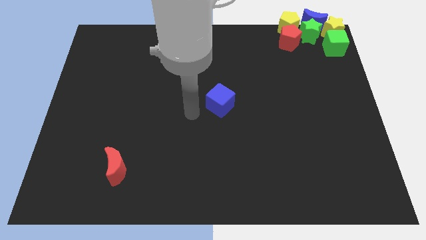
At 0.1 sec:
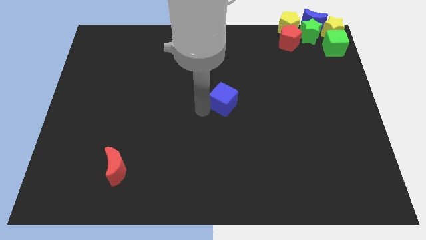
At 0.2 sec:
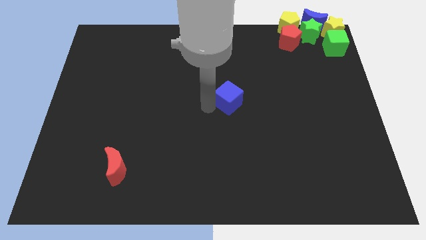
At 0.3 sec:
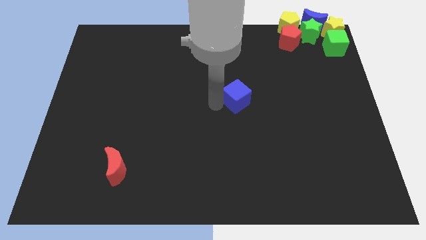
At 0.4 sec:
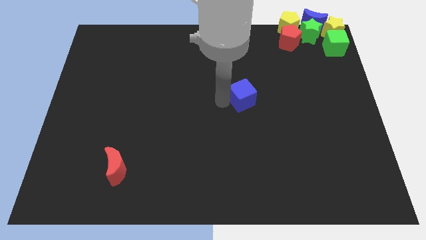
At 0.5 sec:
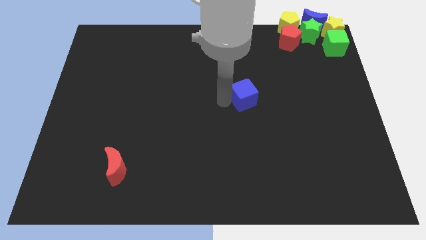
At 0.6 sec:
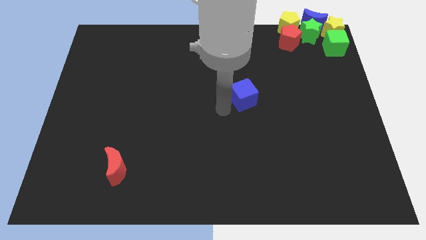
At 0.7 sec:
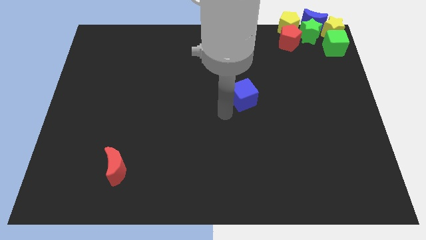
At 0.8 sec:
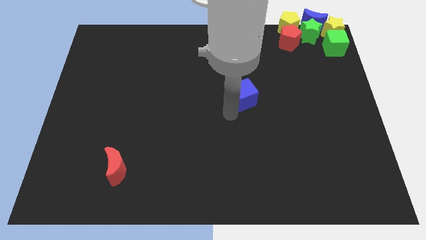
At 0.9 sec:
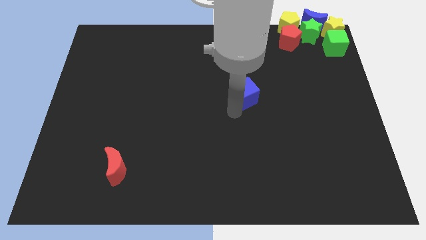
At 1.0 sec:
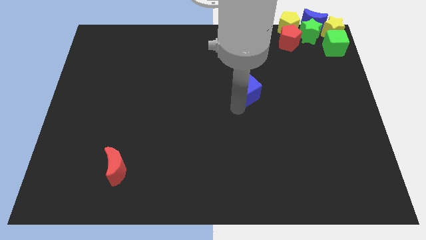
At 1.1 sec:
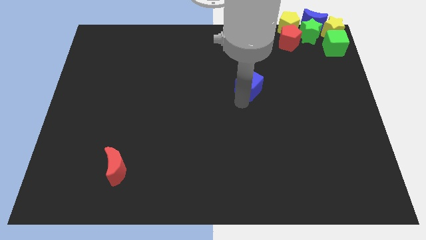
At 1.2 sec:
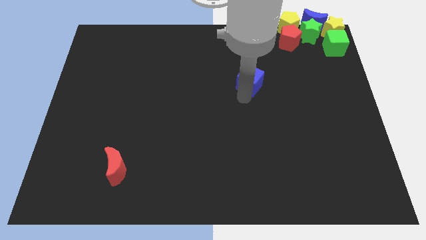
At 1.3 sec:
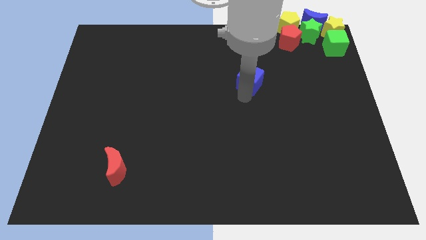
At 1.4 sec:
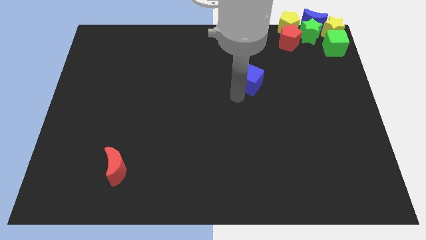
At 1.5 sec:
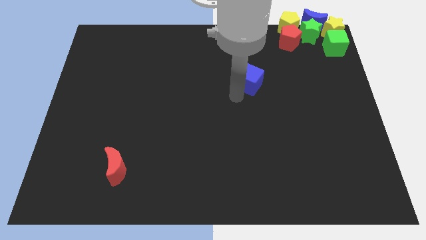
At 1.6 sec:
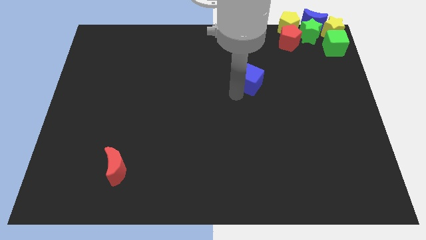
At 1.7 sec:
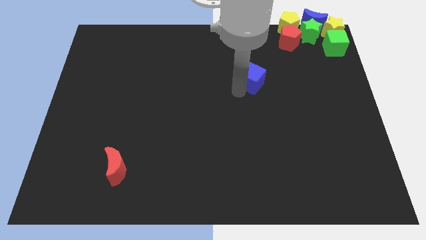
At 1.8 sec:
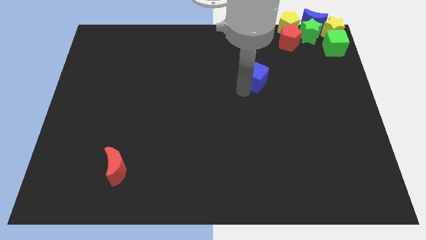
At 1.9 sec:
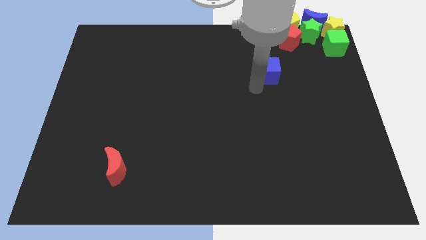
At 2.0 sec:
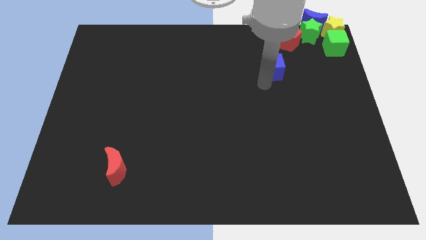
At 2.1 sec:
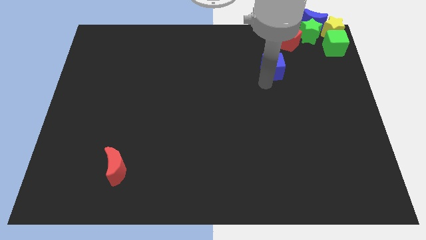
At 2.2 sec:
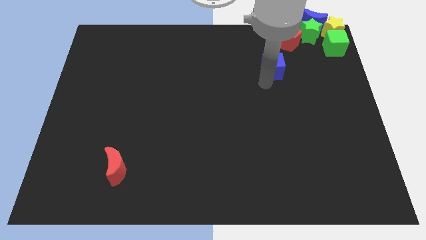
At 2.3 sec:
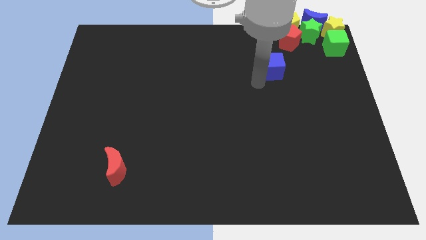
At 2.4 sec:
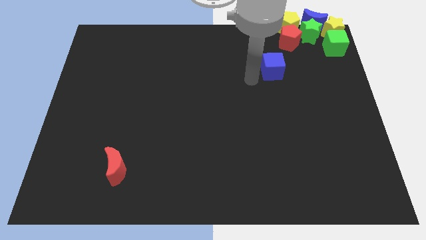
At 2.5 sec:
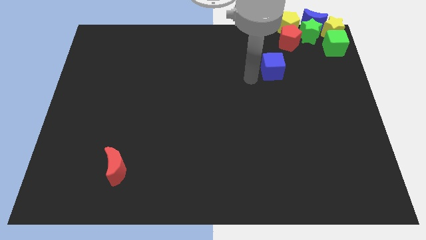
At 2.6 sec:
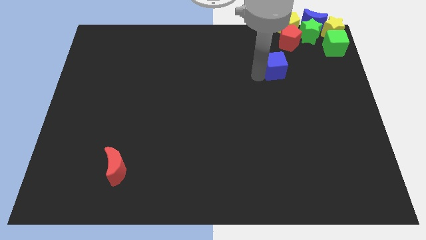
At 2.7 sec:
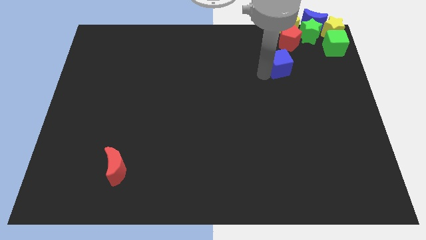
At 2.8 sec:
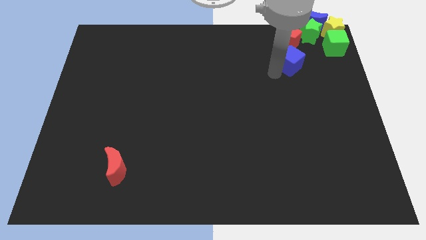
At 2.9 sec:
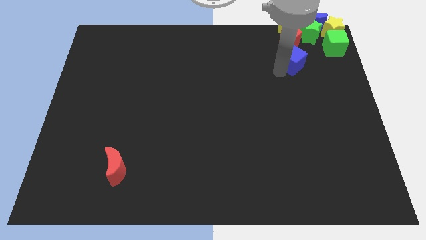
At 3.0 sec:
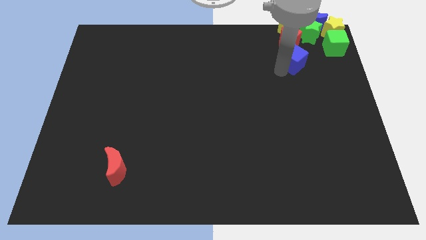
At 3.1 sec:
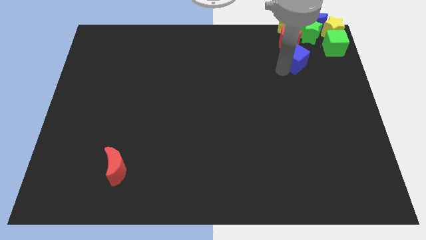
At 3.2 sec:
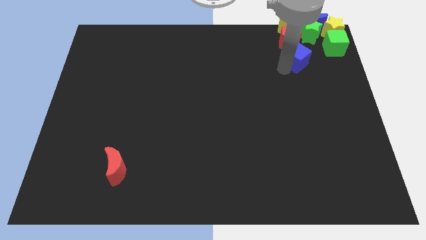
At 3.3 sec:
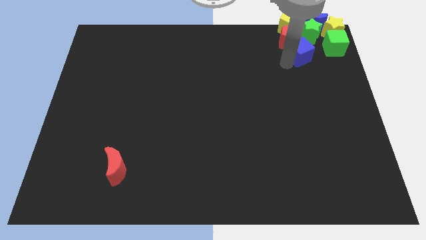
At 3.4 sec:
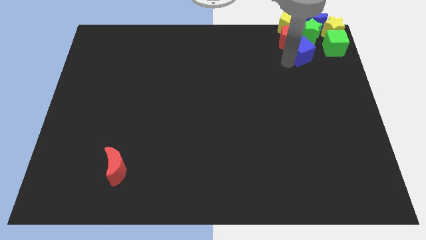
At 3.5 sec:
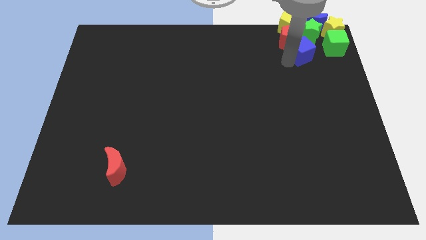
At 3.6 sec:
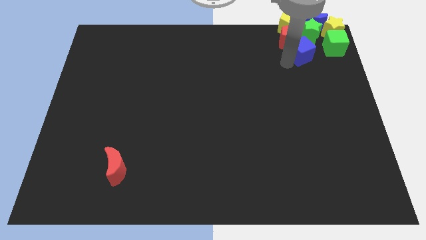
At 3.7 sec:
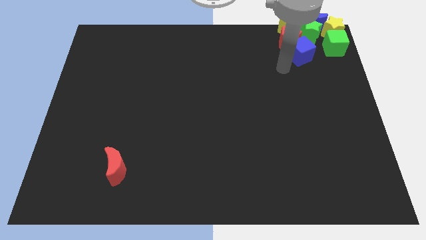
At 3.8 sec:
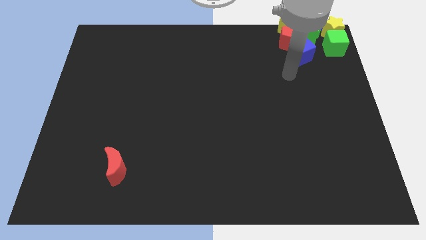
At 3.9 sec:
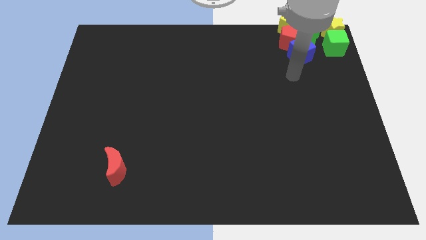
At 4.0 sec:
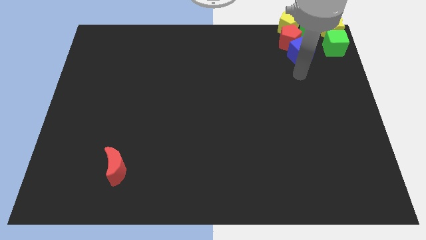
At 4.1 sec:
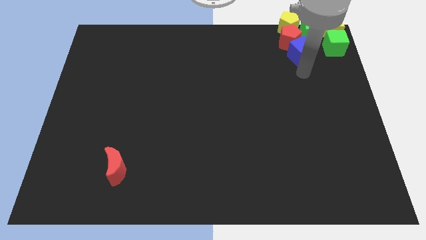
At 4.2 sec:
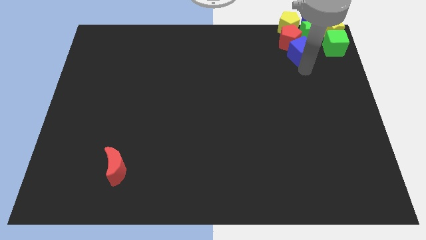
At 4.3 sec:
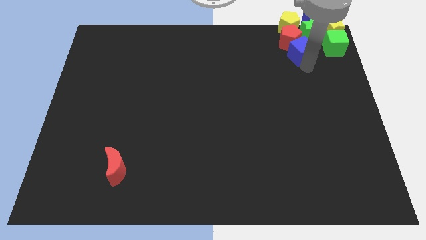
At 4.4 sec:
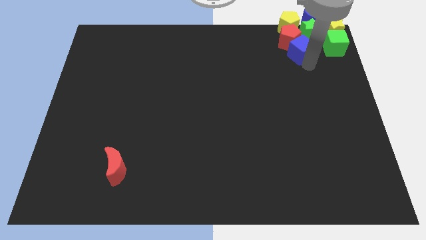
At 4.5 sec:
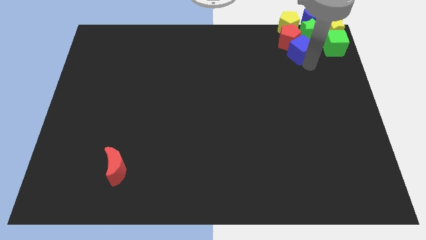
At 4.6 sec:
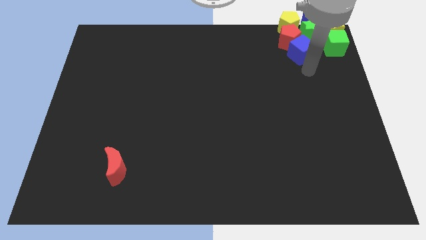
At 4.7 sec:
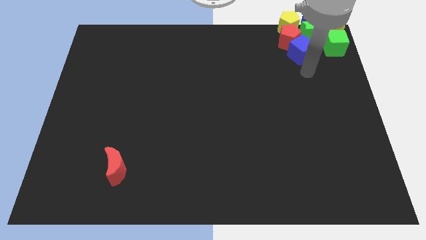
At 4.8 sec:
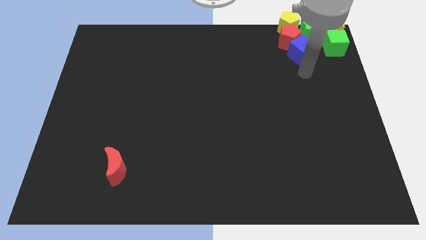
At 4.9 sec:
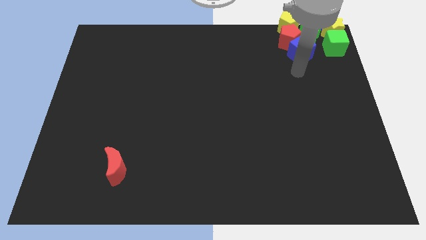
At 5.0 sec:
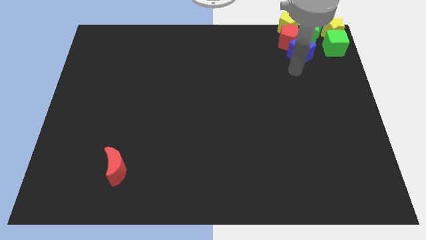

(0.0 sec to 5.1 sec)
move blue cube left beside the green cube

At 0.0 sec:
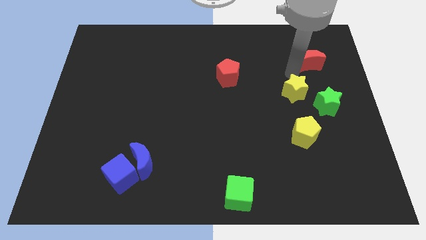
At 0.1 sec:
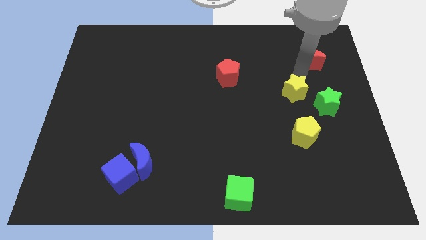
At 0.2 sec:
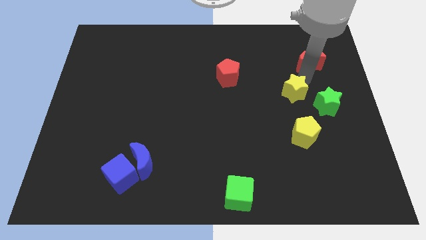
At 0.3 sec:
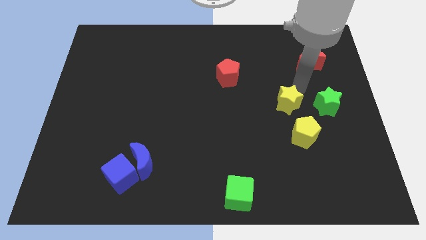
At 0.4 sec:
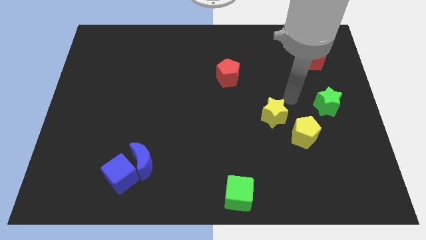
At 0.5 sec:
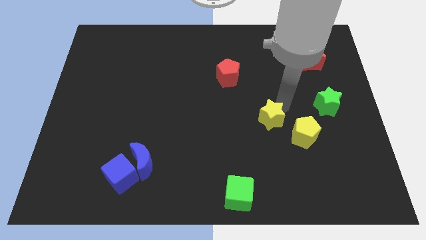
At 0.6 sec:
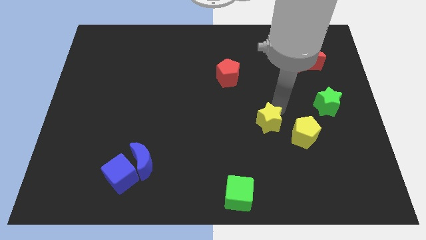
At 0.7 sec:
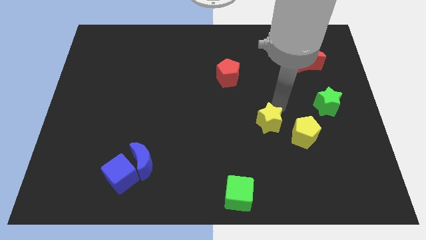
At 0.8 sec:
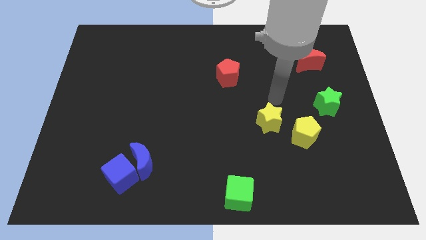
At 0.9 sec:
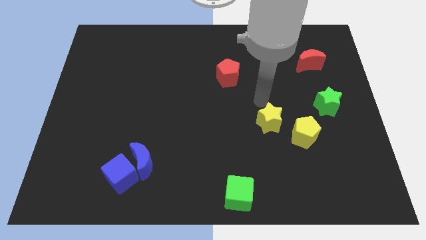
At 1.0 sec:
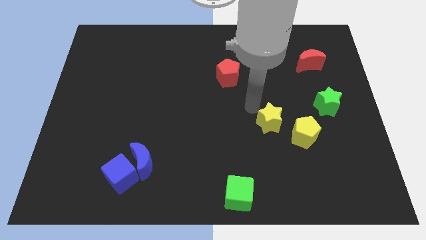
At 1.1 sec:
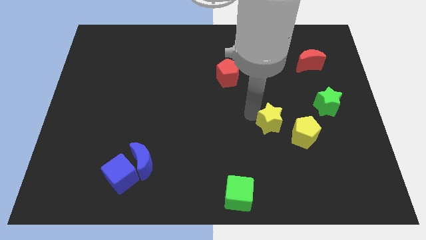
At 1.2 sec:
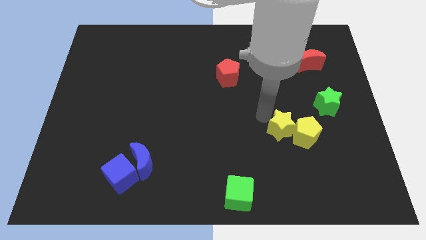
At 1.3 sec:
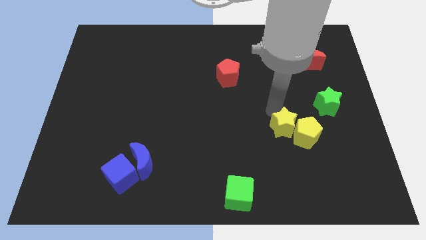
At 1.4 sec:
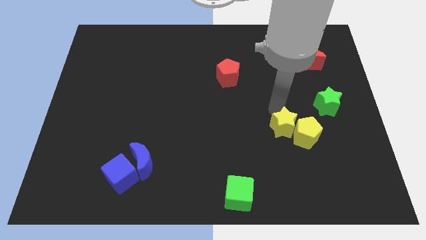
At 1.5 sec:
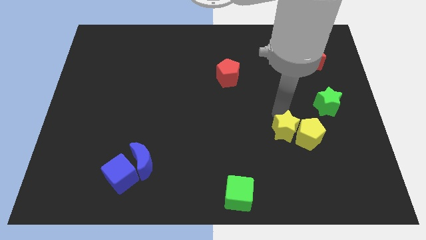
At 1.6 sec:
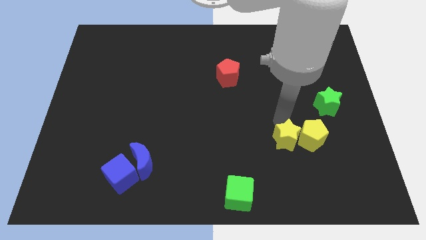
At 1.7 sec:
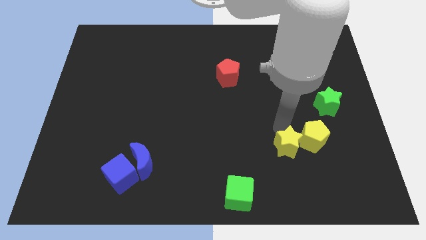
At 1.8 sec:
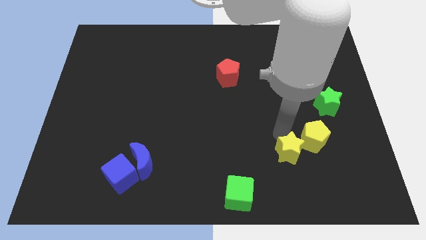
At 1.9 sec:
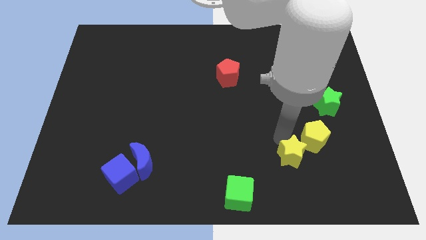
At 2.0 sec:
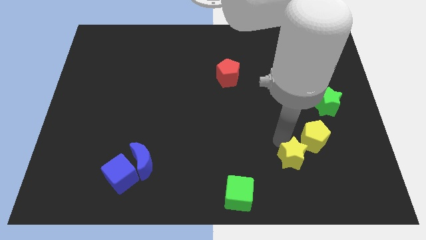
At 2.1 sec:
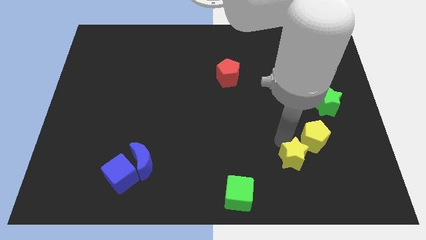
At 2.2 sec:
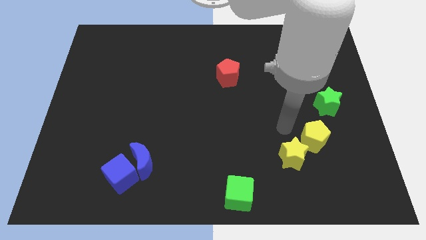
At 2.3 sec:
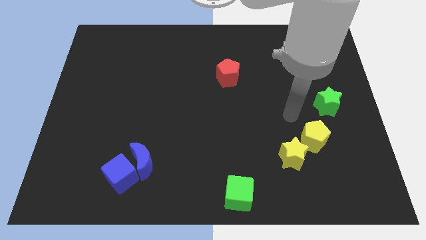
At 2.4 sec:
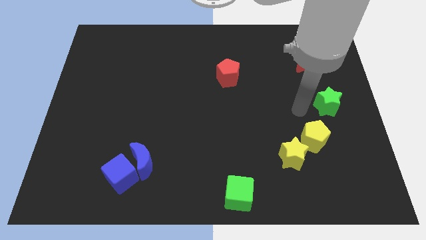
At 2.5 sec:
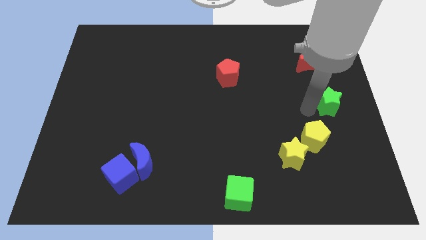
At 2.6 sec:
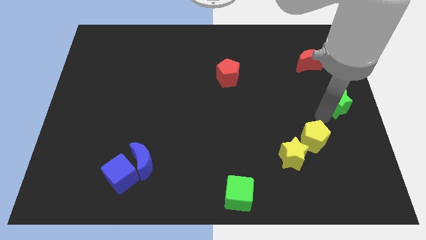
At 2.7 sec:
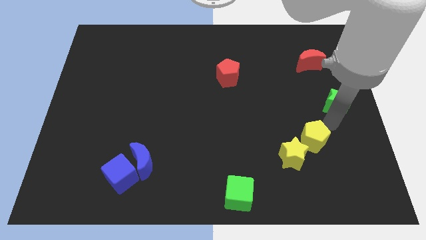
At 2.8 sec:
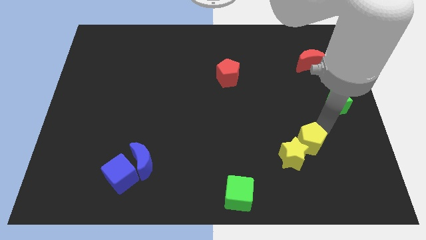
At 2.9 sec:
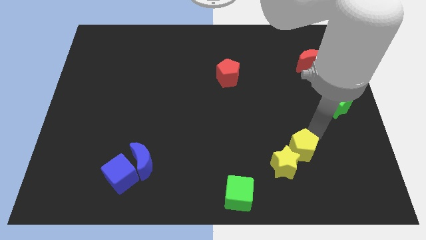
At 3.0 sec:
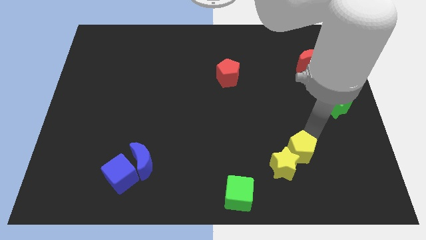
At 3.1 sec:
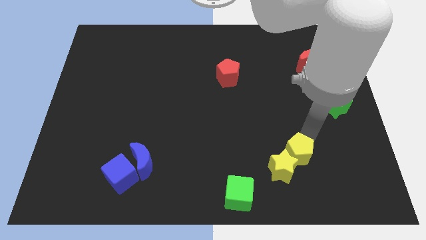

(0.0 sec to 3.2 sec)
move the yellow pentagon diagonally to the left of the yellow pentagon

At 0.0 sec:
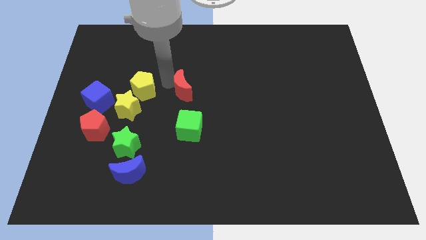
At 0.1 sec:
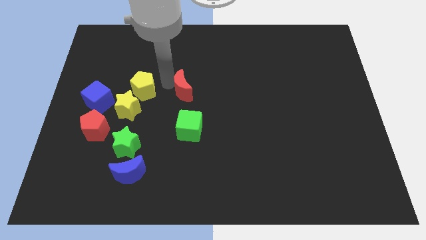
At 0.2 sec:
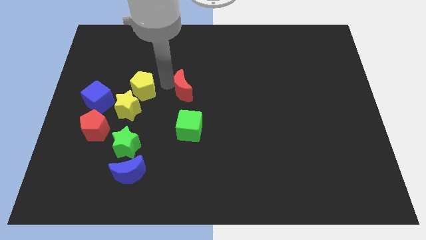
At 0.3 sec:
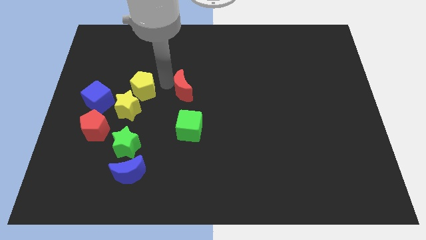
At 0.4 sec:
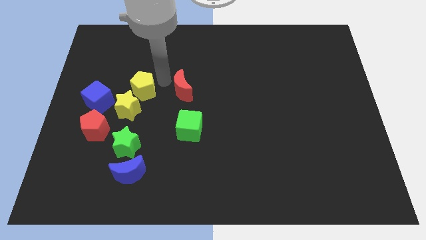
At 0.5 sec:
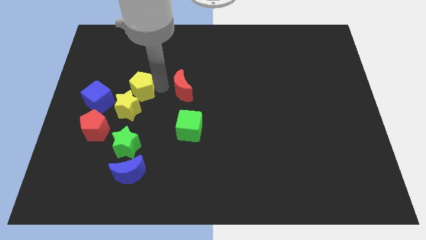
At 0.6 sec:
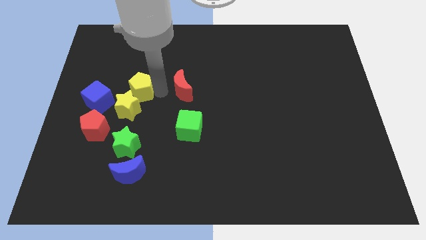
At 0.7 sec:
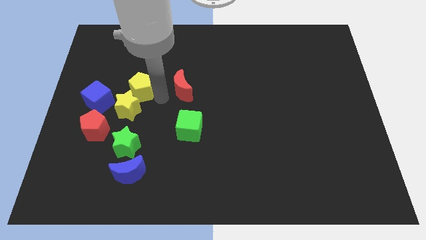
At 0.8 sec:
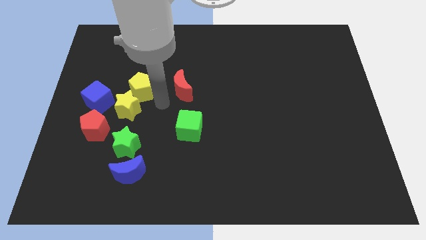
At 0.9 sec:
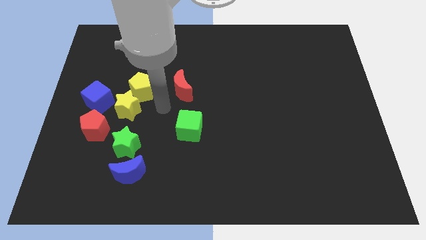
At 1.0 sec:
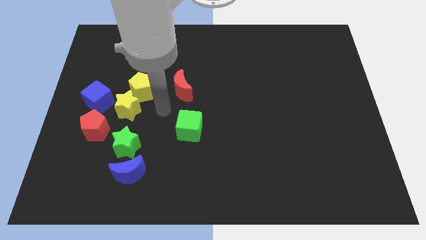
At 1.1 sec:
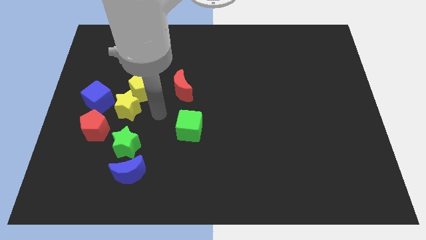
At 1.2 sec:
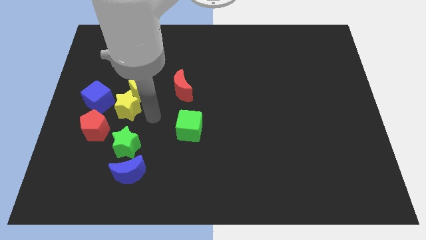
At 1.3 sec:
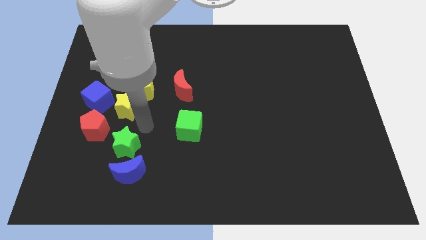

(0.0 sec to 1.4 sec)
move your arm near to the green star
